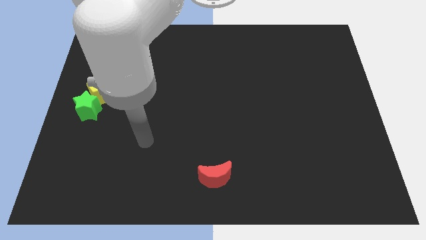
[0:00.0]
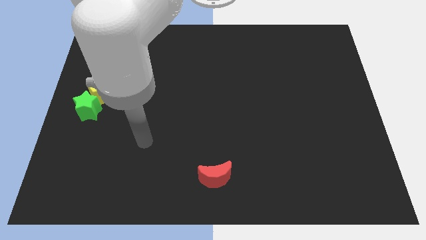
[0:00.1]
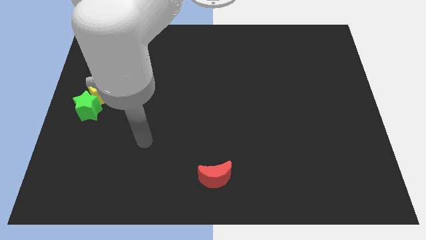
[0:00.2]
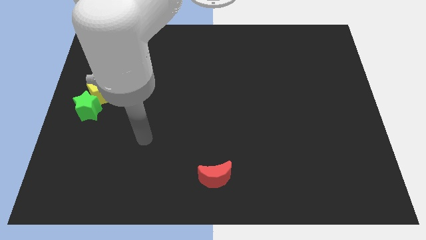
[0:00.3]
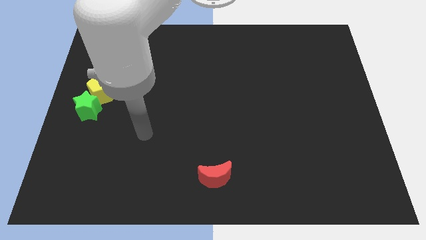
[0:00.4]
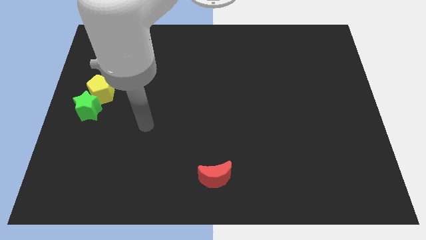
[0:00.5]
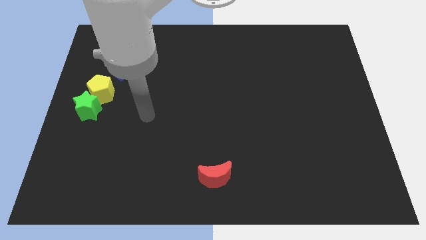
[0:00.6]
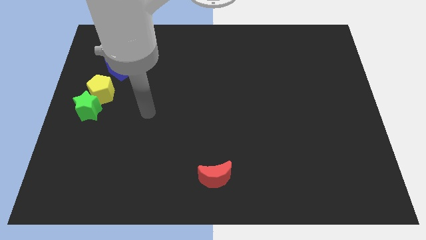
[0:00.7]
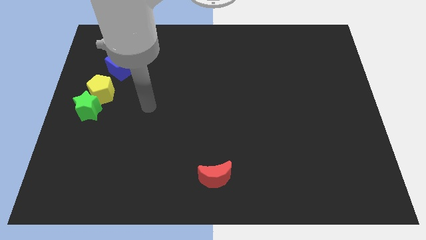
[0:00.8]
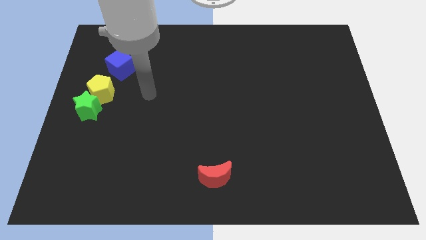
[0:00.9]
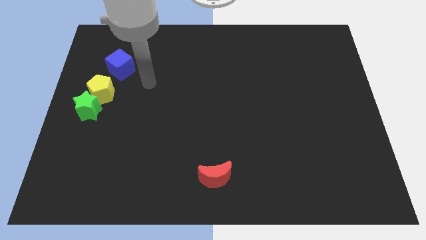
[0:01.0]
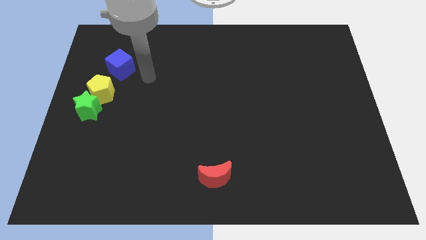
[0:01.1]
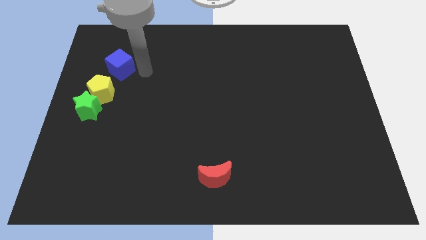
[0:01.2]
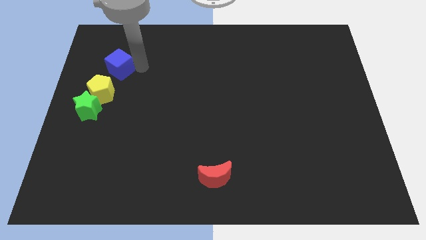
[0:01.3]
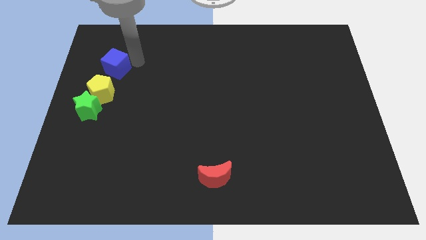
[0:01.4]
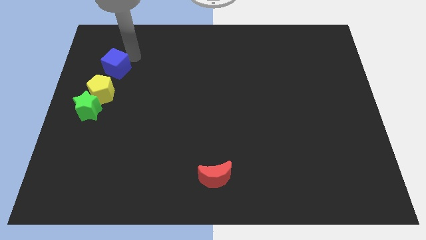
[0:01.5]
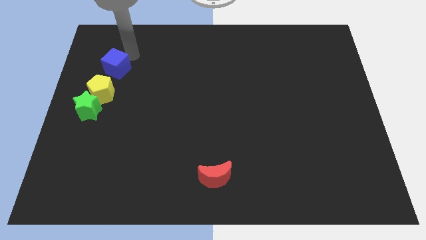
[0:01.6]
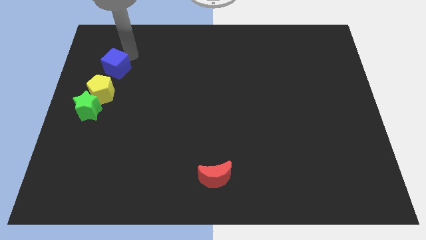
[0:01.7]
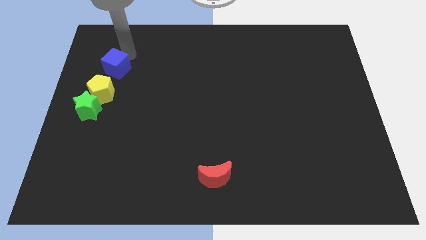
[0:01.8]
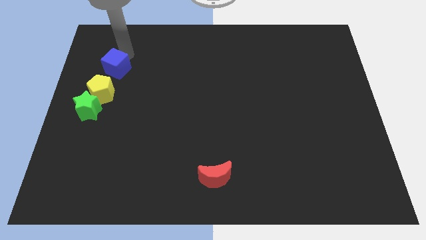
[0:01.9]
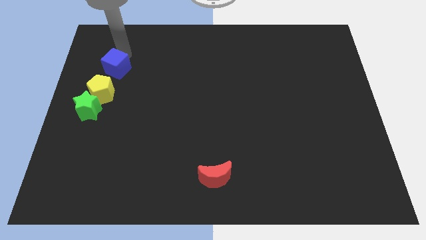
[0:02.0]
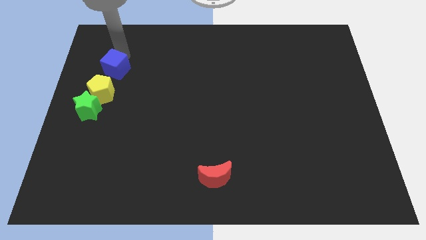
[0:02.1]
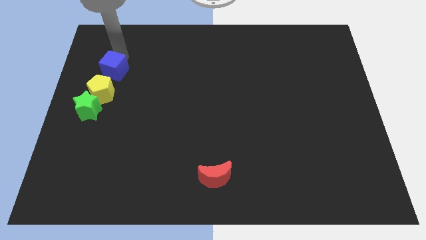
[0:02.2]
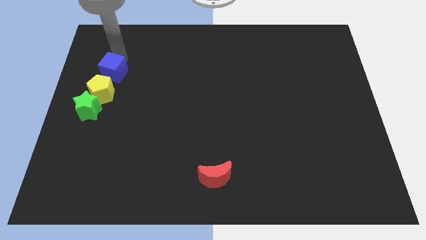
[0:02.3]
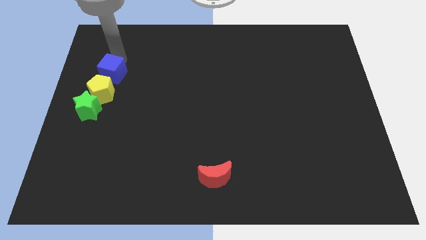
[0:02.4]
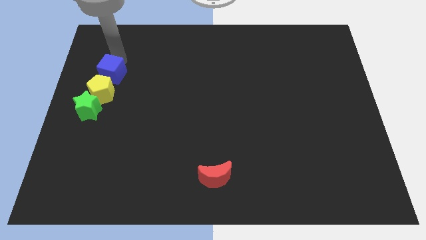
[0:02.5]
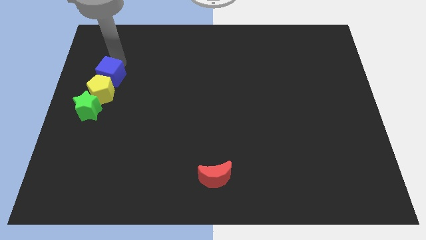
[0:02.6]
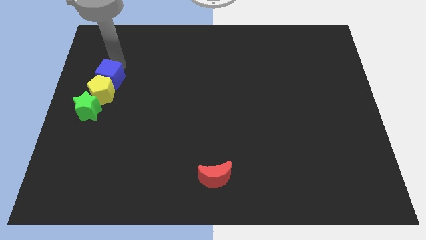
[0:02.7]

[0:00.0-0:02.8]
move the cube close to the yellow block

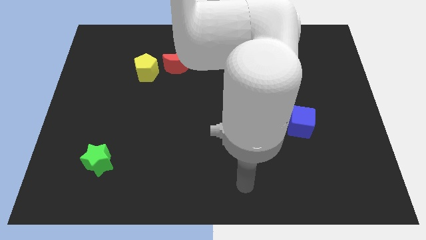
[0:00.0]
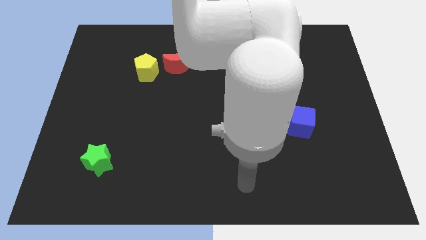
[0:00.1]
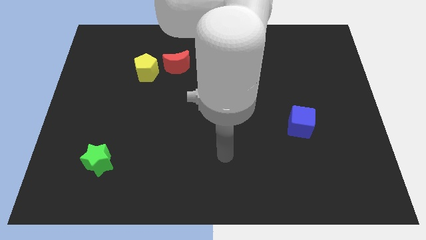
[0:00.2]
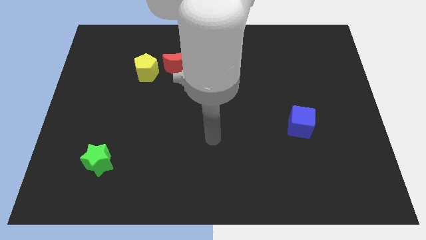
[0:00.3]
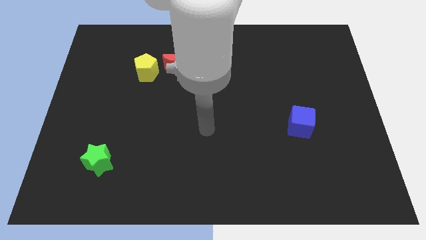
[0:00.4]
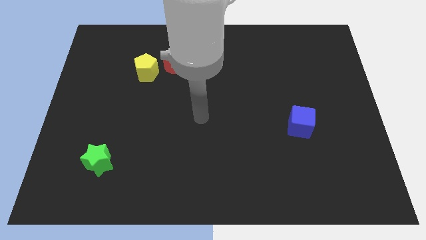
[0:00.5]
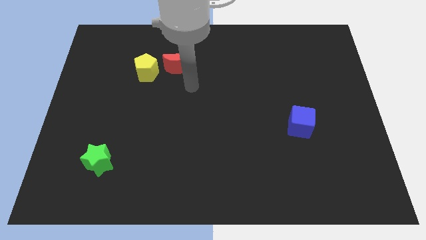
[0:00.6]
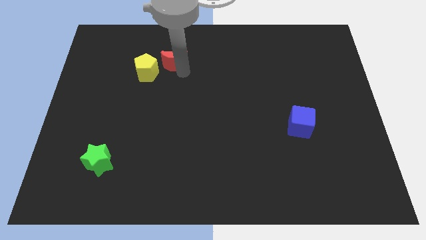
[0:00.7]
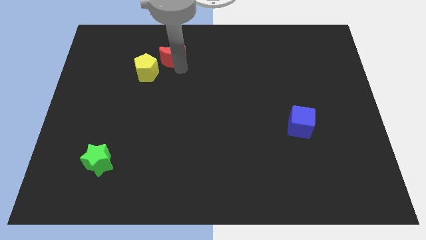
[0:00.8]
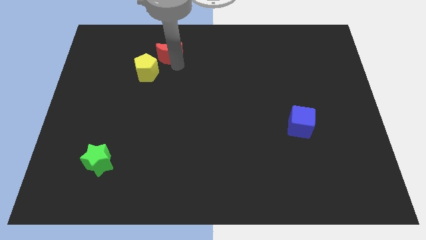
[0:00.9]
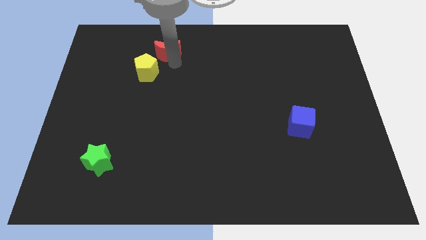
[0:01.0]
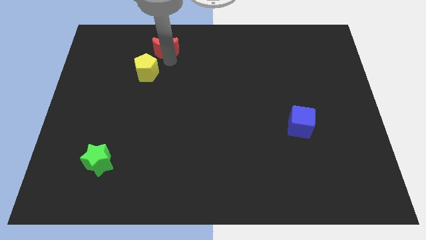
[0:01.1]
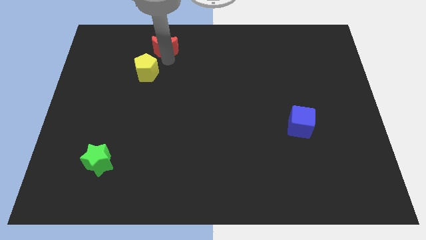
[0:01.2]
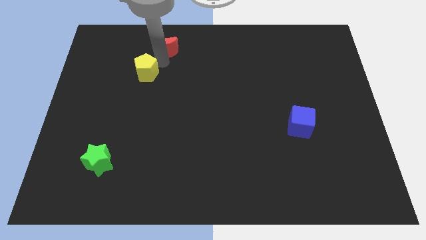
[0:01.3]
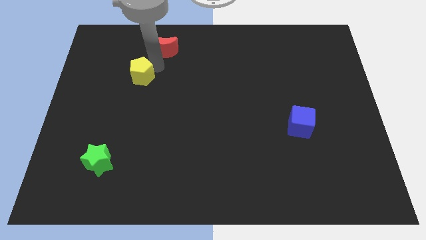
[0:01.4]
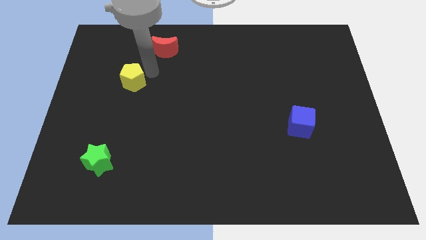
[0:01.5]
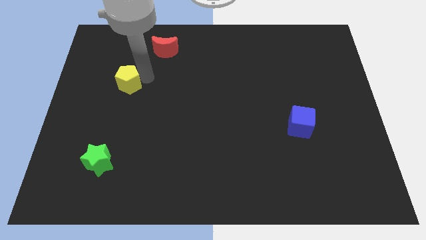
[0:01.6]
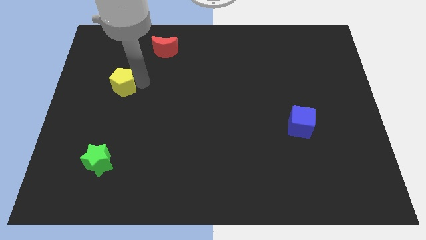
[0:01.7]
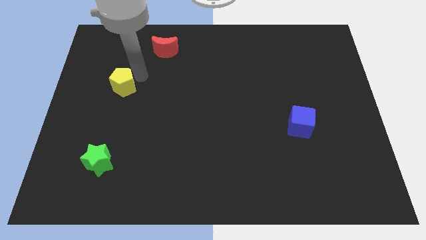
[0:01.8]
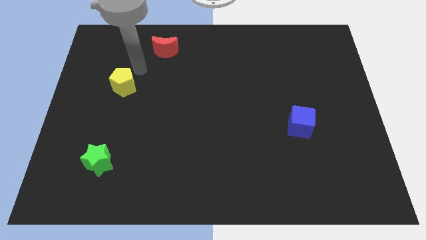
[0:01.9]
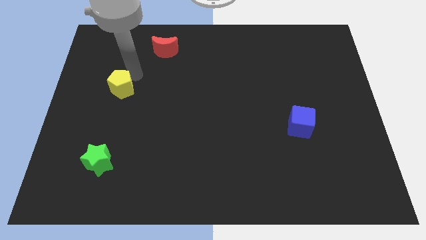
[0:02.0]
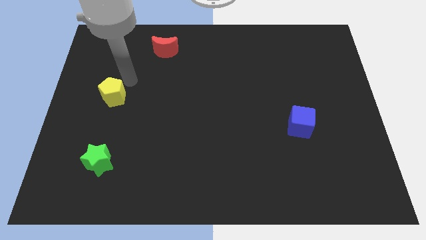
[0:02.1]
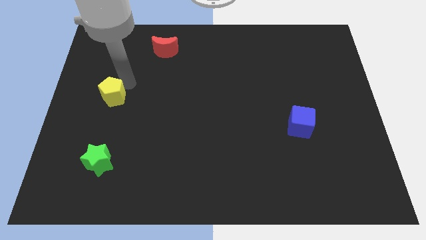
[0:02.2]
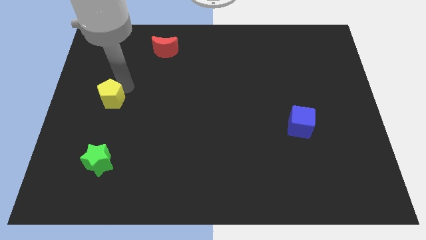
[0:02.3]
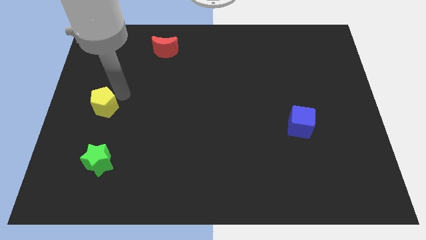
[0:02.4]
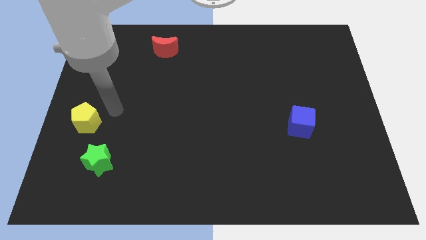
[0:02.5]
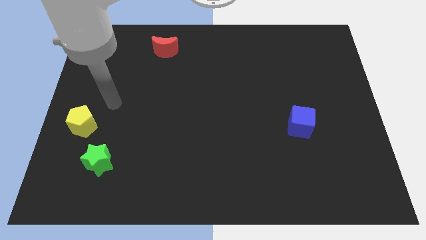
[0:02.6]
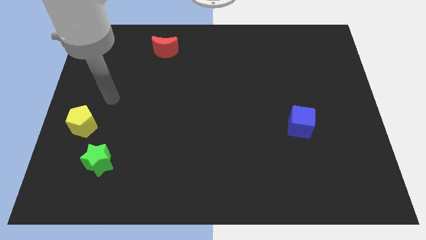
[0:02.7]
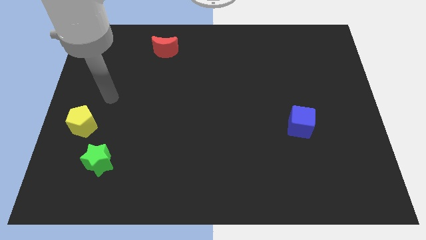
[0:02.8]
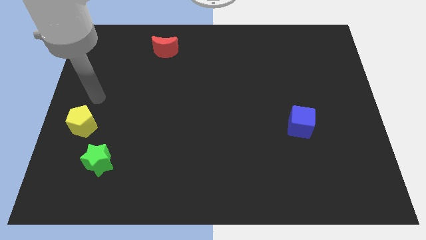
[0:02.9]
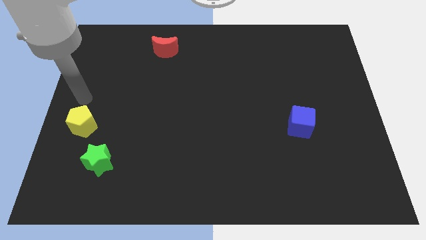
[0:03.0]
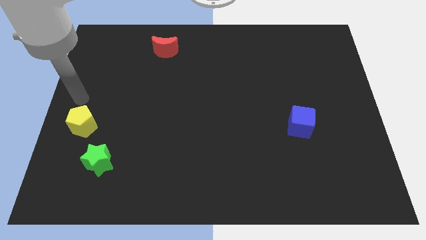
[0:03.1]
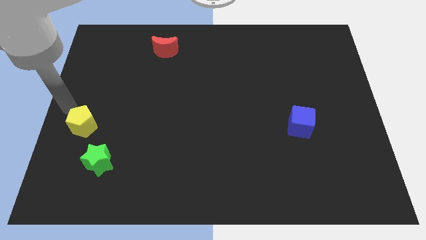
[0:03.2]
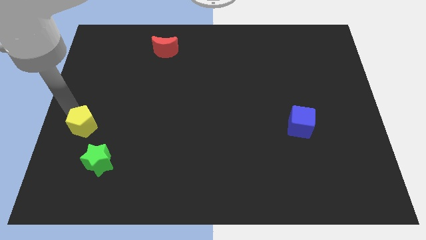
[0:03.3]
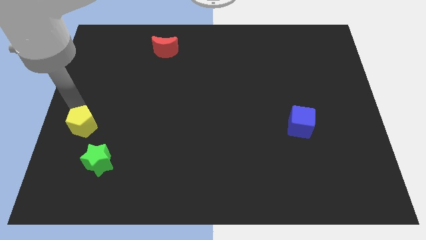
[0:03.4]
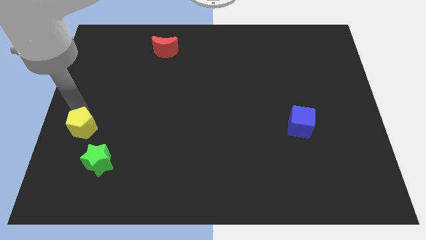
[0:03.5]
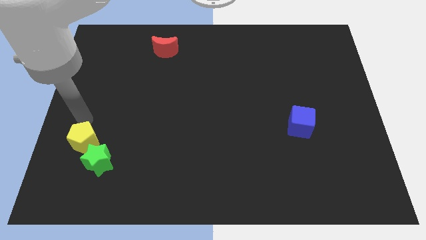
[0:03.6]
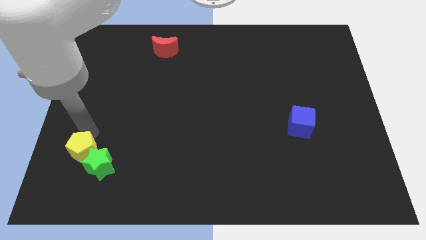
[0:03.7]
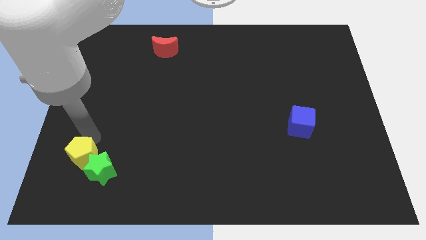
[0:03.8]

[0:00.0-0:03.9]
put the yellow pentagon next to the green star

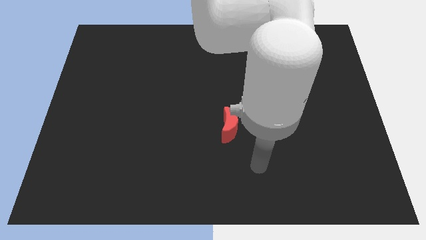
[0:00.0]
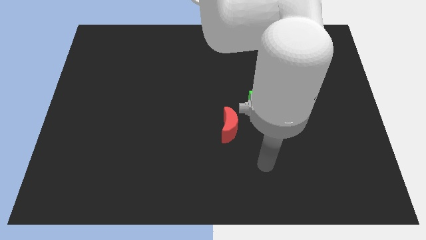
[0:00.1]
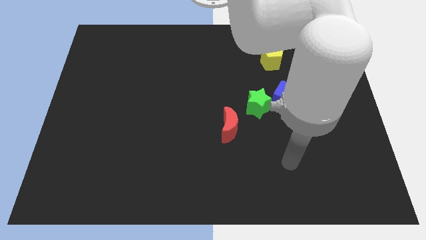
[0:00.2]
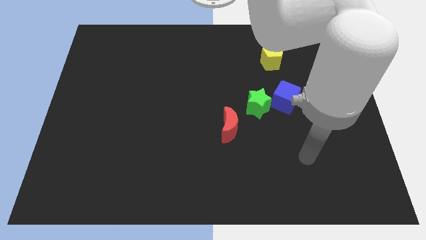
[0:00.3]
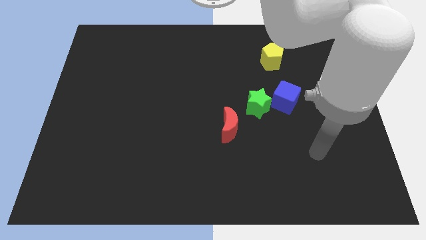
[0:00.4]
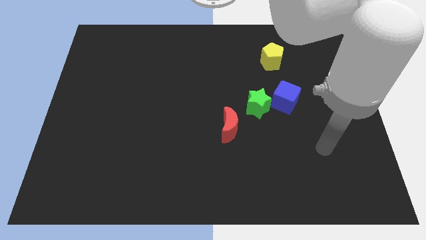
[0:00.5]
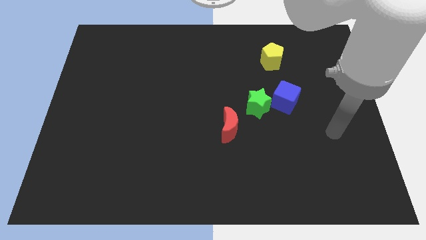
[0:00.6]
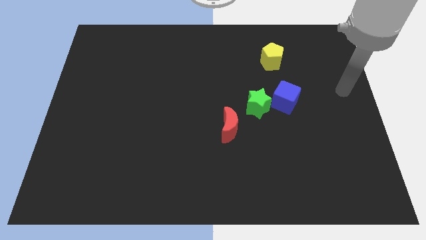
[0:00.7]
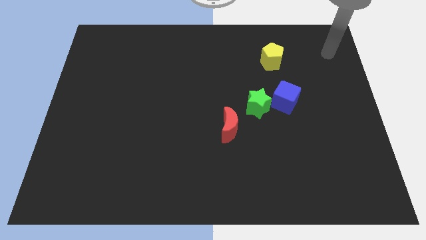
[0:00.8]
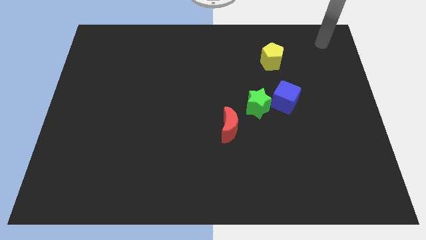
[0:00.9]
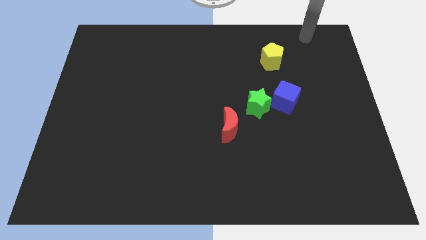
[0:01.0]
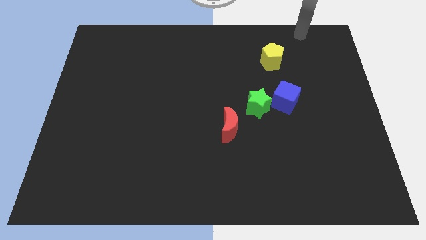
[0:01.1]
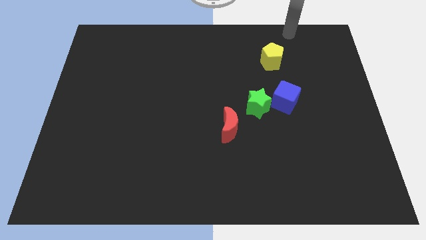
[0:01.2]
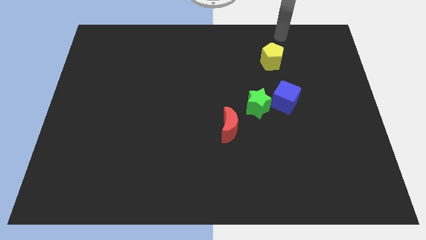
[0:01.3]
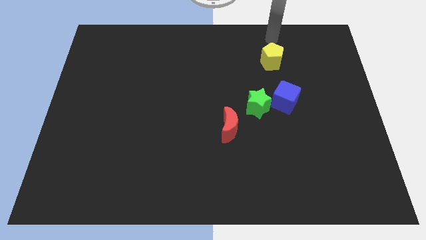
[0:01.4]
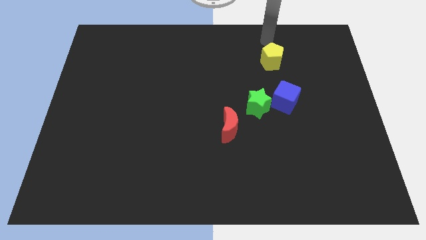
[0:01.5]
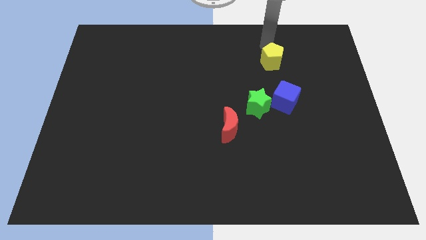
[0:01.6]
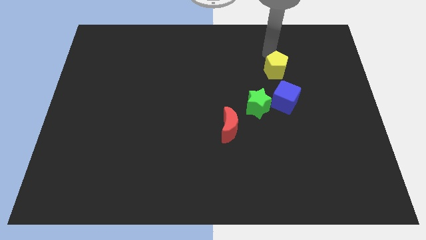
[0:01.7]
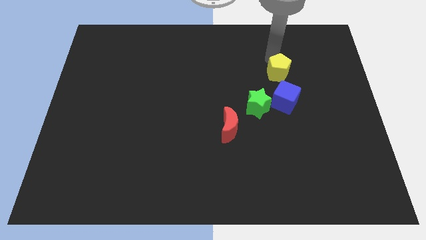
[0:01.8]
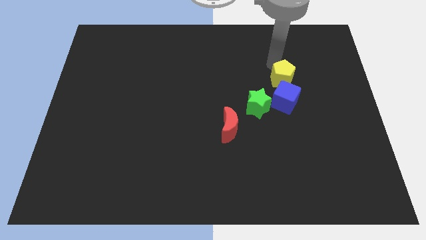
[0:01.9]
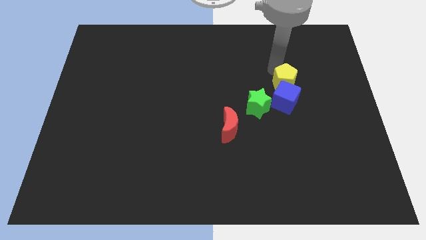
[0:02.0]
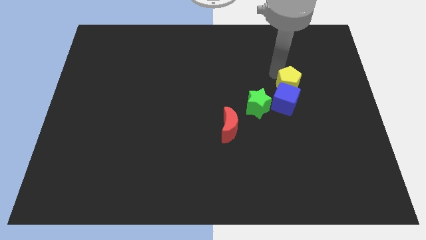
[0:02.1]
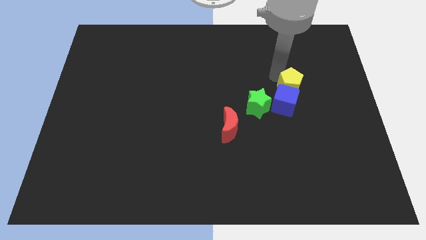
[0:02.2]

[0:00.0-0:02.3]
move the pentagon to the blue block
